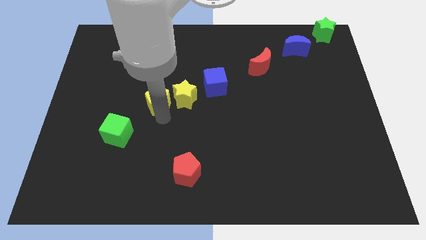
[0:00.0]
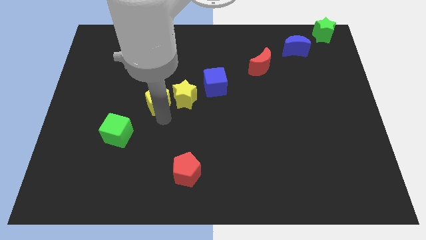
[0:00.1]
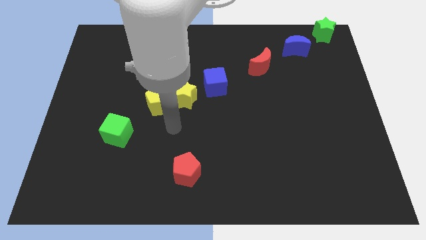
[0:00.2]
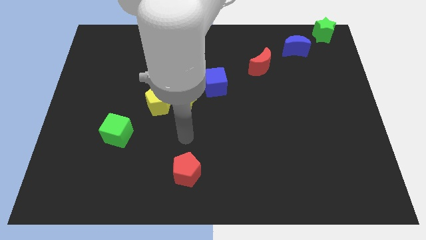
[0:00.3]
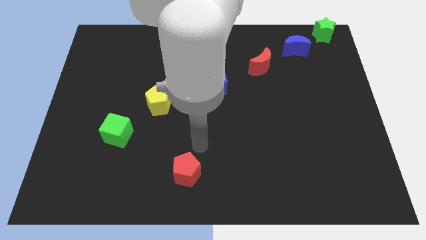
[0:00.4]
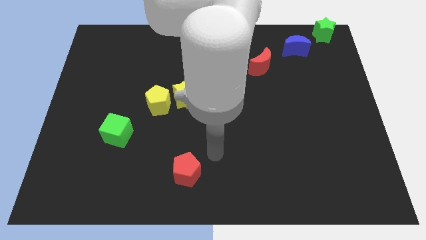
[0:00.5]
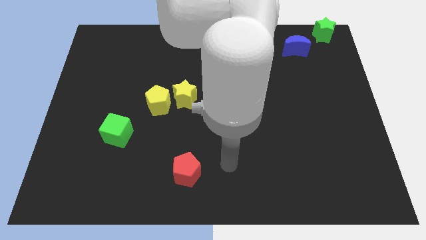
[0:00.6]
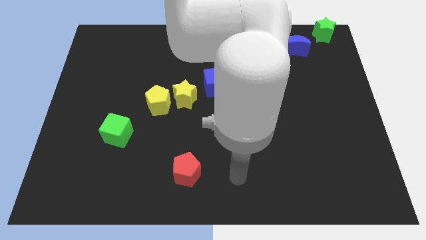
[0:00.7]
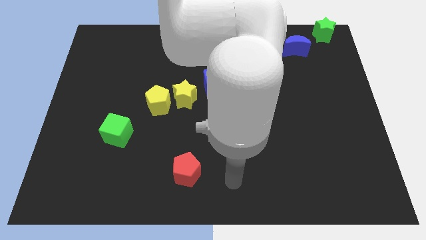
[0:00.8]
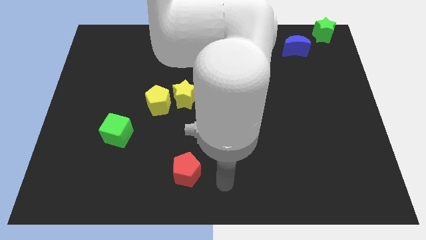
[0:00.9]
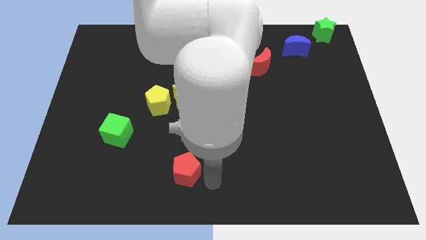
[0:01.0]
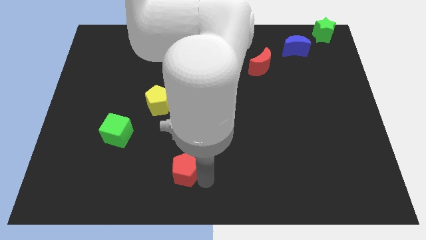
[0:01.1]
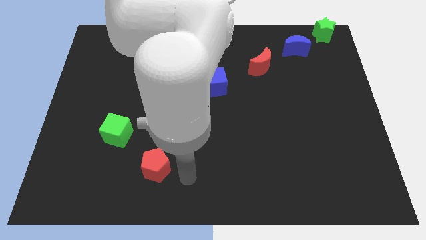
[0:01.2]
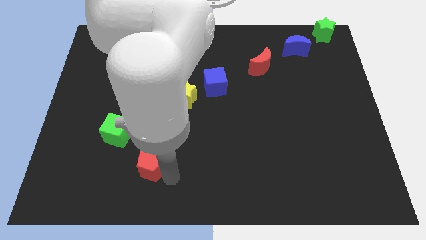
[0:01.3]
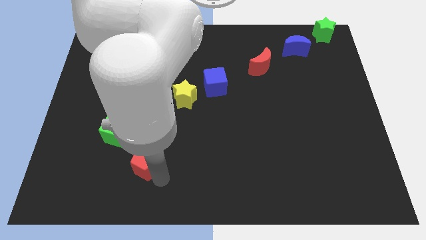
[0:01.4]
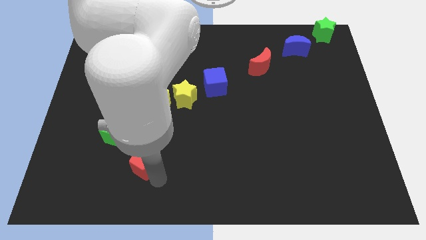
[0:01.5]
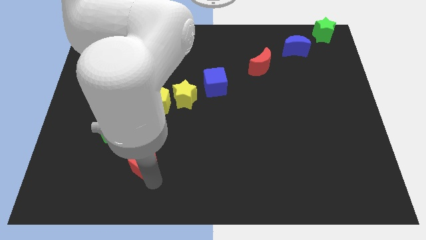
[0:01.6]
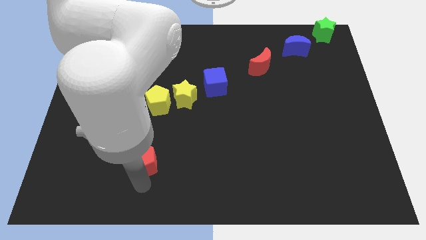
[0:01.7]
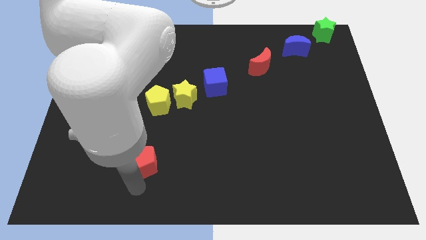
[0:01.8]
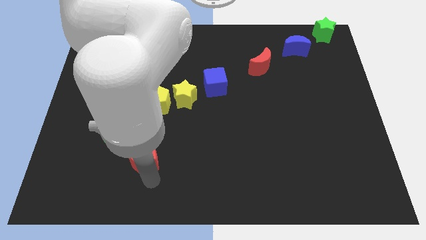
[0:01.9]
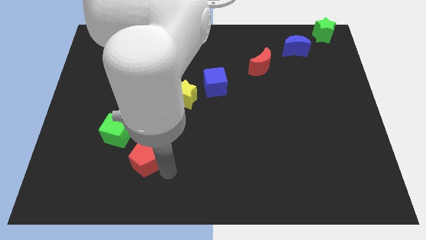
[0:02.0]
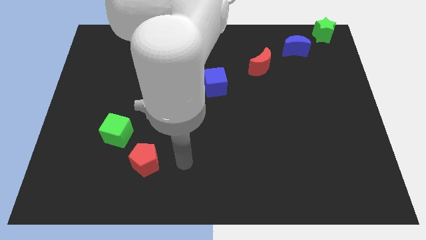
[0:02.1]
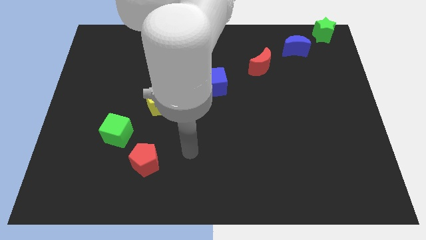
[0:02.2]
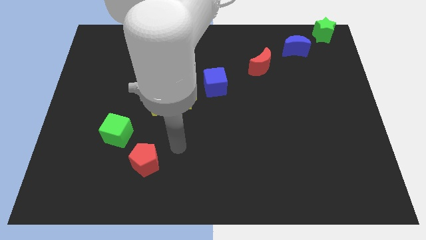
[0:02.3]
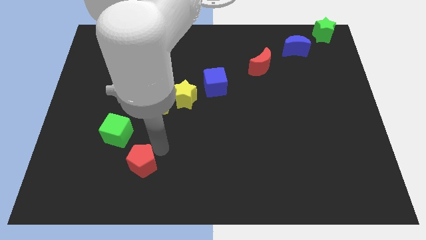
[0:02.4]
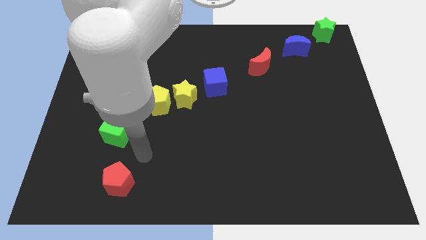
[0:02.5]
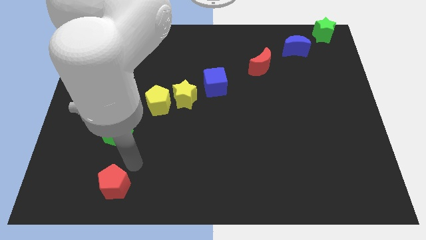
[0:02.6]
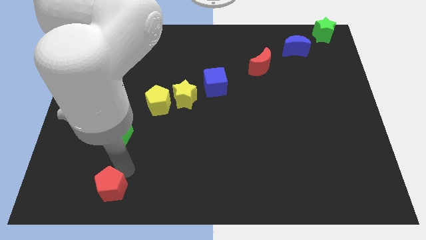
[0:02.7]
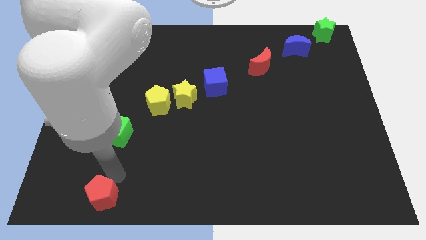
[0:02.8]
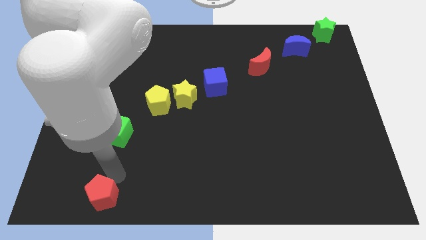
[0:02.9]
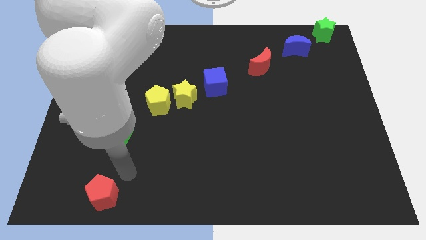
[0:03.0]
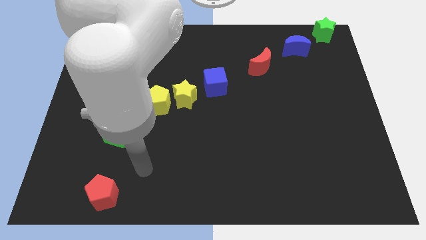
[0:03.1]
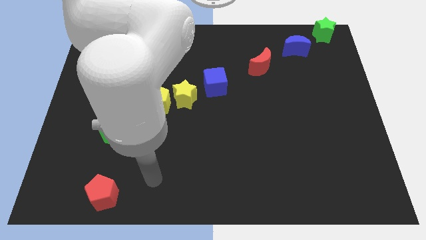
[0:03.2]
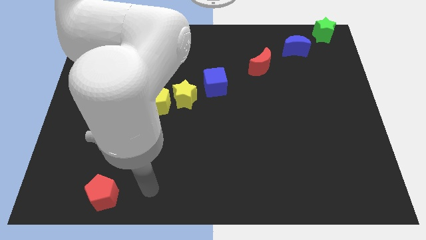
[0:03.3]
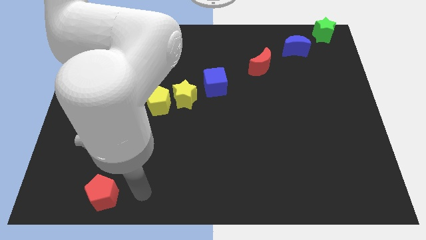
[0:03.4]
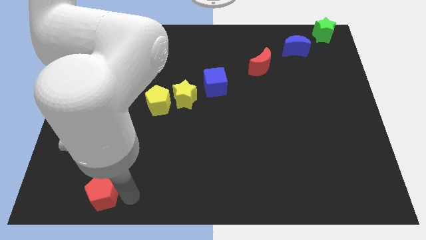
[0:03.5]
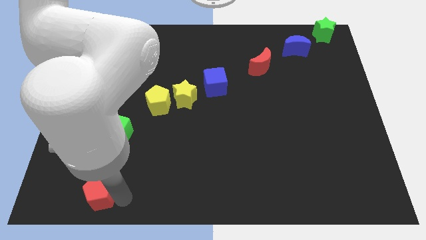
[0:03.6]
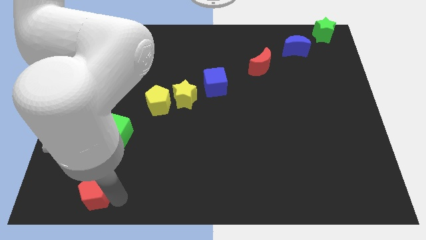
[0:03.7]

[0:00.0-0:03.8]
move the red pentagon down to the green cube

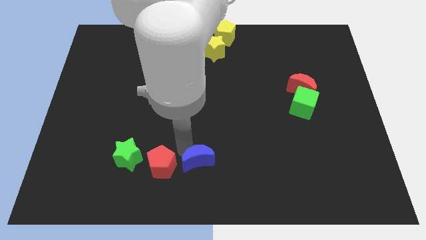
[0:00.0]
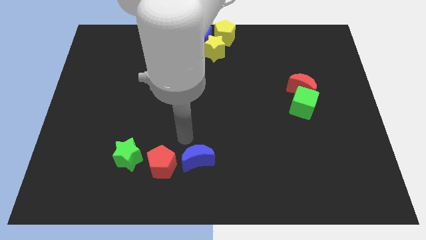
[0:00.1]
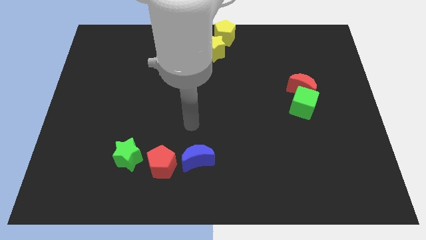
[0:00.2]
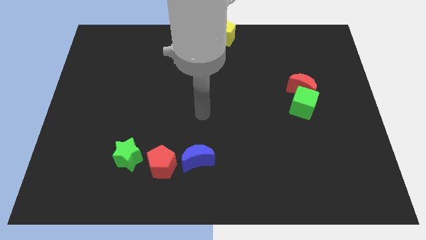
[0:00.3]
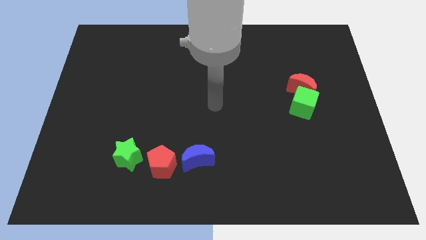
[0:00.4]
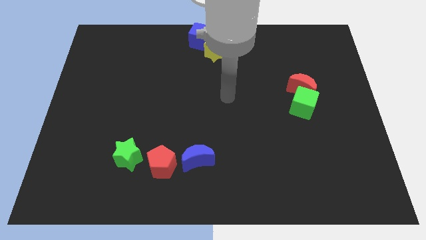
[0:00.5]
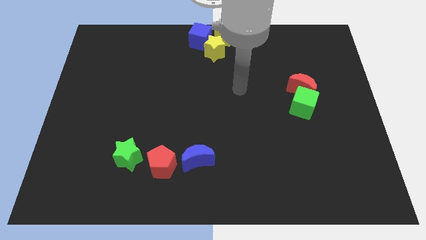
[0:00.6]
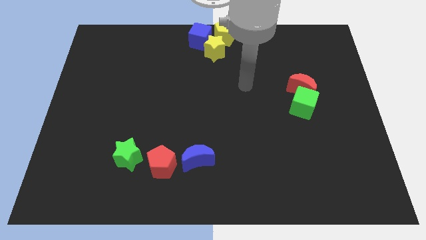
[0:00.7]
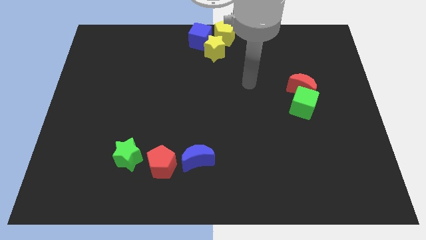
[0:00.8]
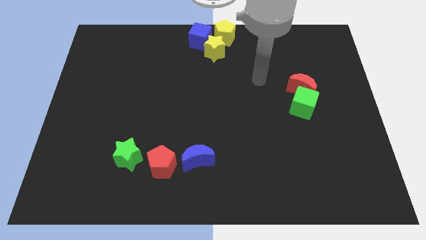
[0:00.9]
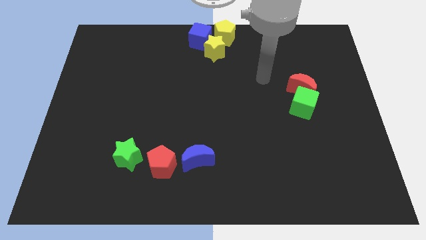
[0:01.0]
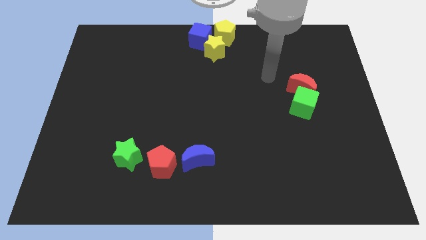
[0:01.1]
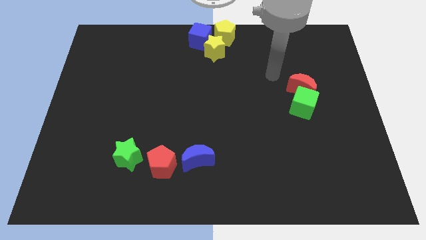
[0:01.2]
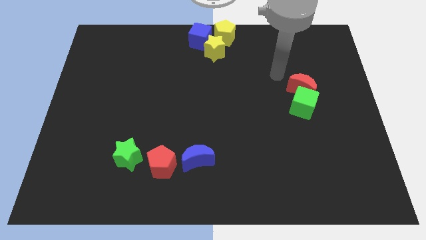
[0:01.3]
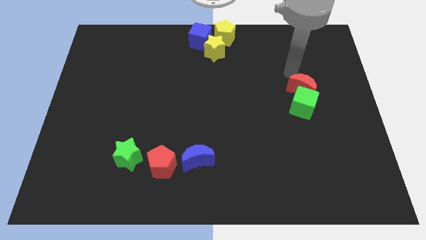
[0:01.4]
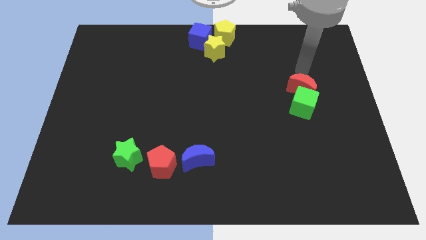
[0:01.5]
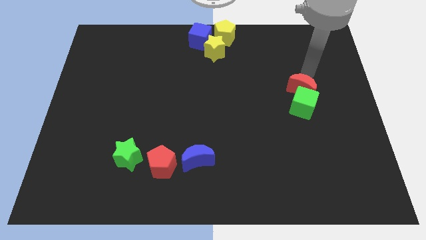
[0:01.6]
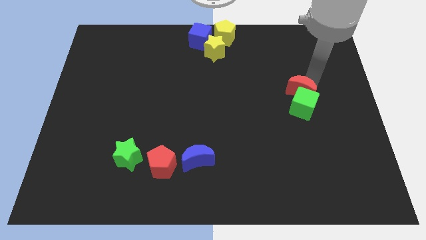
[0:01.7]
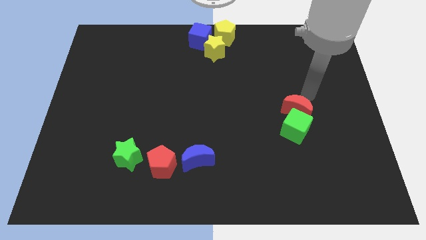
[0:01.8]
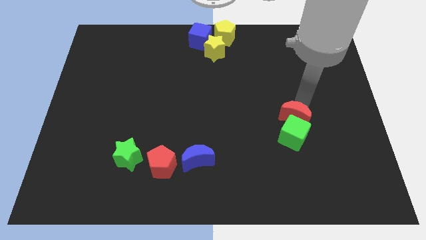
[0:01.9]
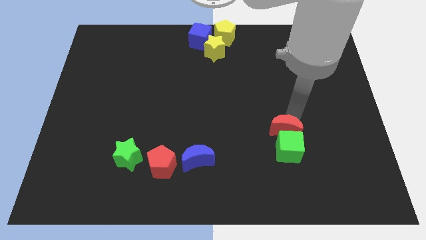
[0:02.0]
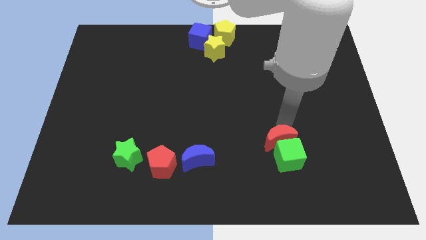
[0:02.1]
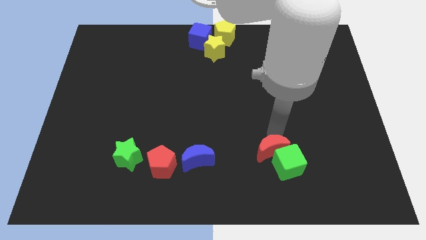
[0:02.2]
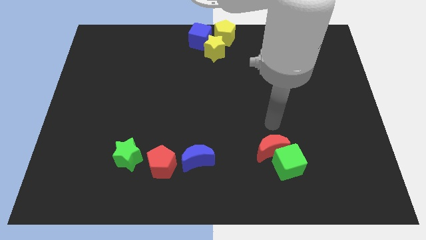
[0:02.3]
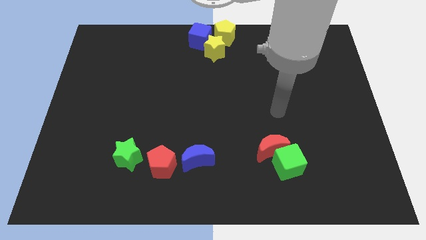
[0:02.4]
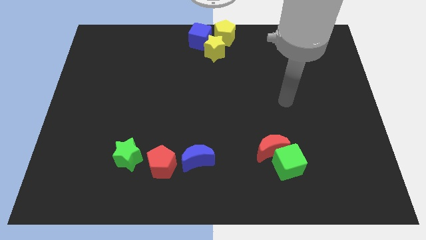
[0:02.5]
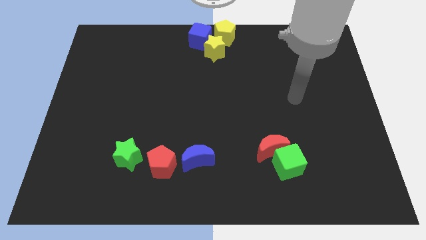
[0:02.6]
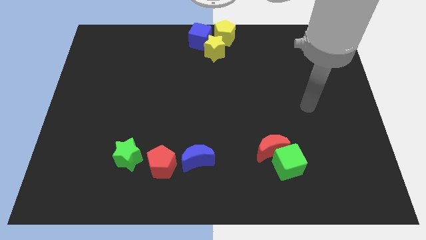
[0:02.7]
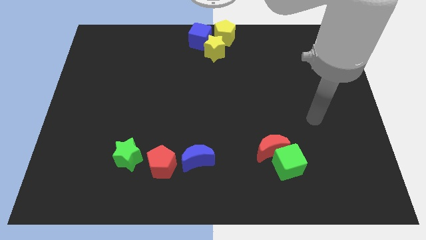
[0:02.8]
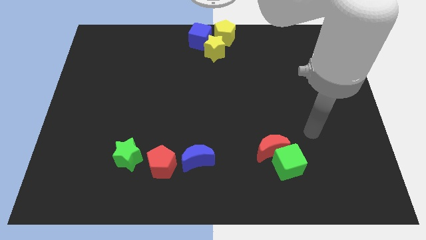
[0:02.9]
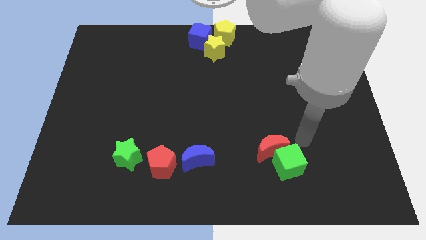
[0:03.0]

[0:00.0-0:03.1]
push the red crescent and green cube to the right side of the blue crescent

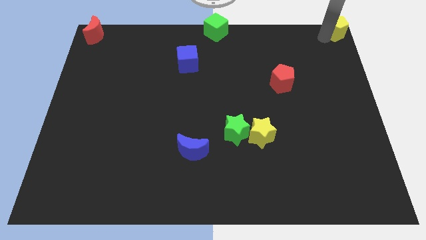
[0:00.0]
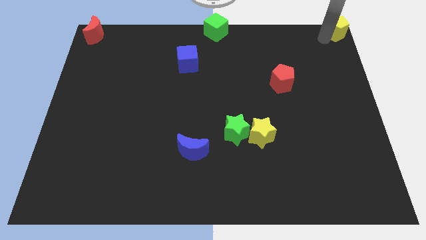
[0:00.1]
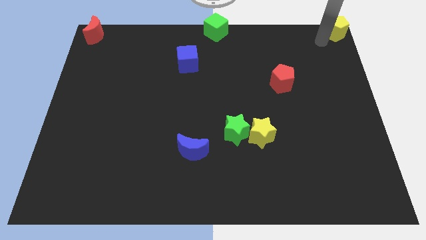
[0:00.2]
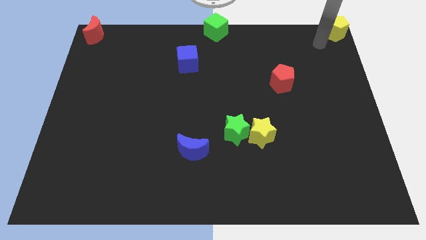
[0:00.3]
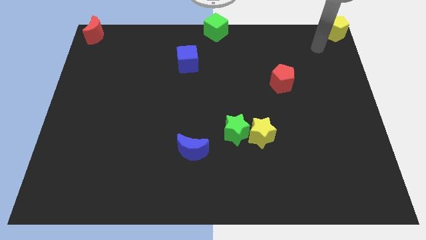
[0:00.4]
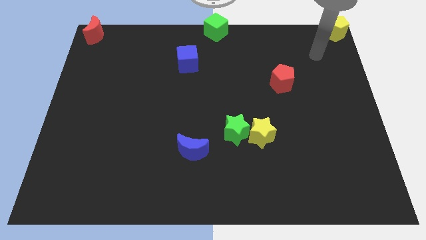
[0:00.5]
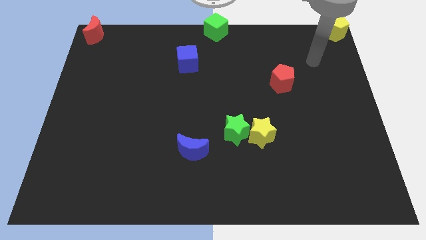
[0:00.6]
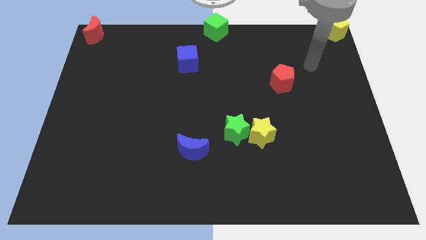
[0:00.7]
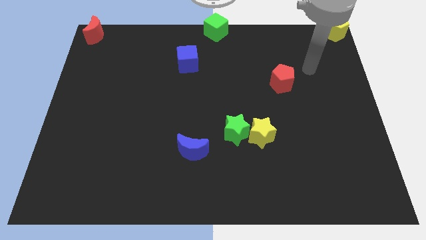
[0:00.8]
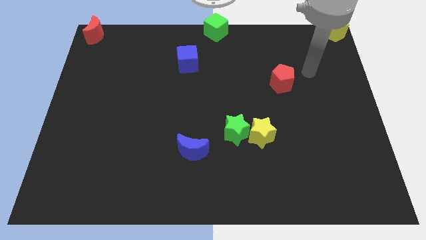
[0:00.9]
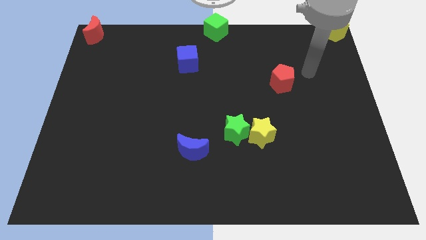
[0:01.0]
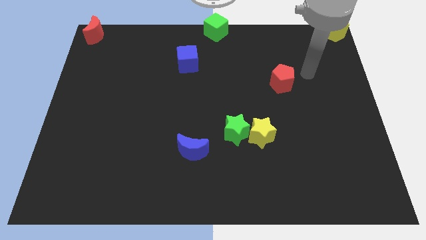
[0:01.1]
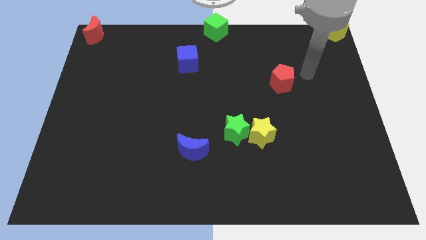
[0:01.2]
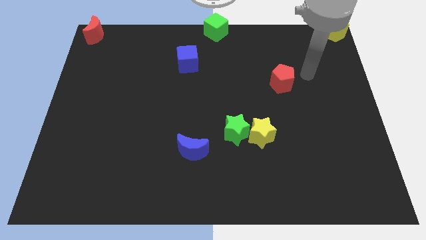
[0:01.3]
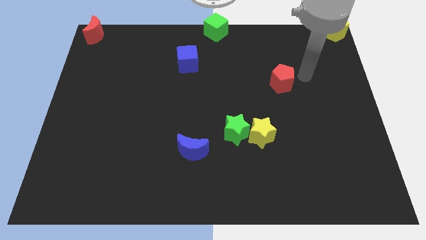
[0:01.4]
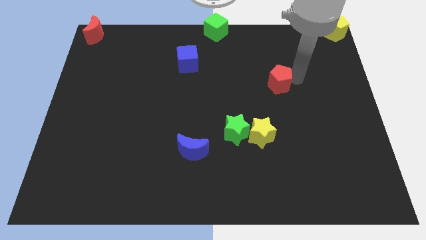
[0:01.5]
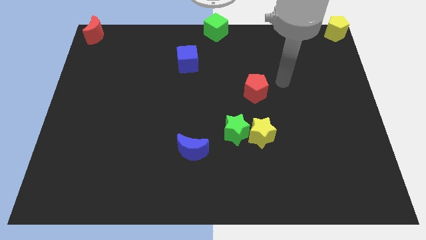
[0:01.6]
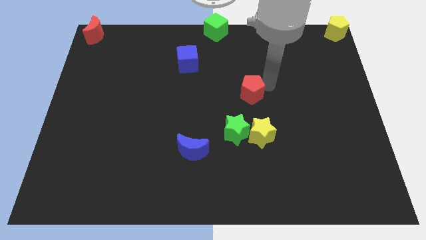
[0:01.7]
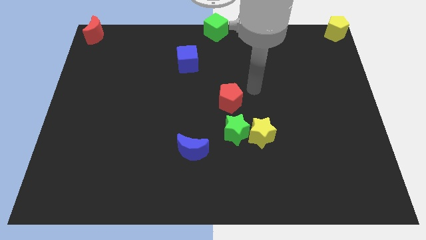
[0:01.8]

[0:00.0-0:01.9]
place the red pentagon above the green star
